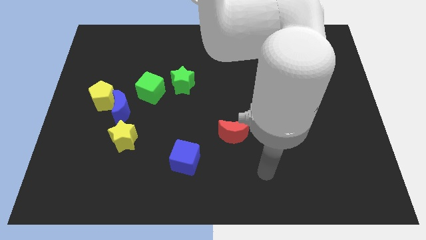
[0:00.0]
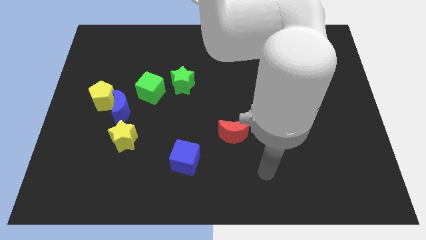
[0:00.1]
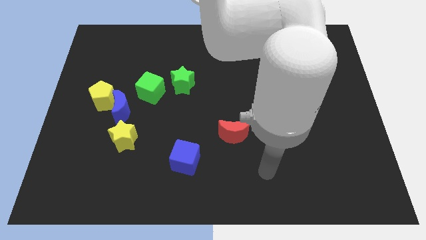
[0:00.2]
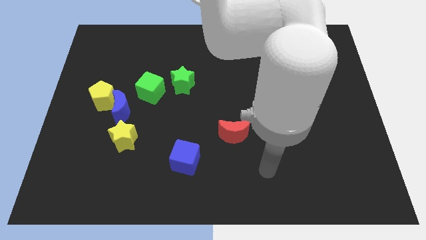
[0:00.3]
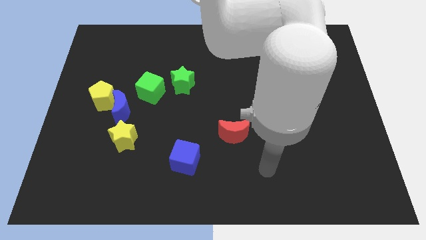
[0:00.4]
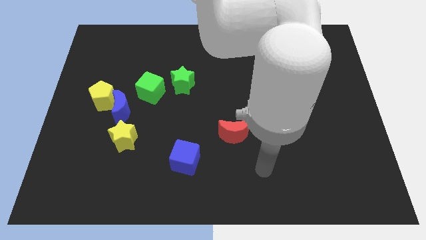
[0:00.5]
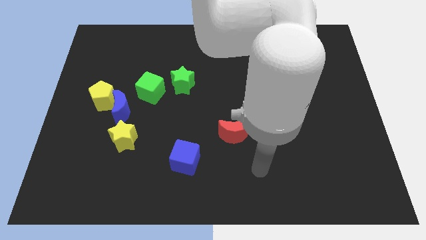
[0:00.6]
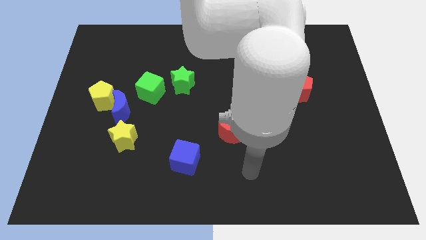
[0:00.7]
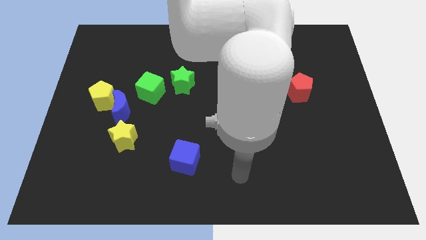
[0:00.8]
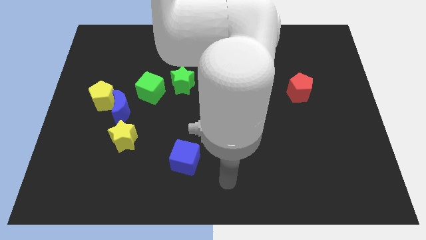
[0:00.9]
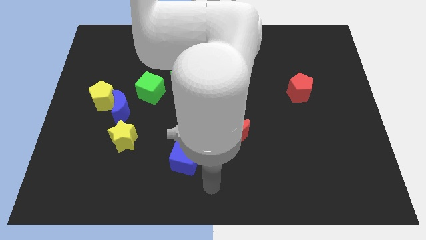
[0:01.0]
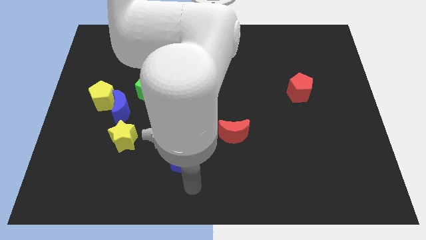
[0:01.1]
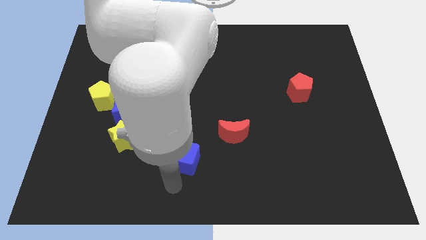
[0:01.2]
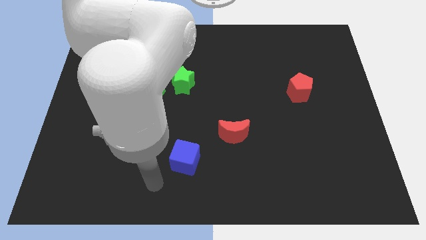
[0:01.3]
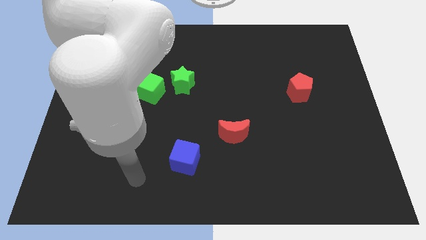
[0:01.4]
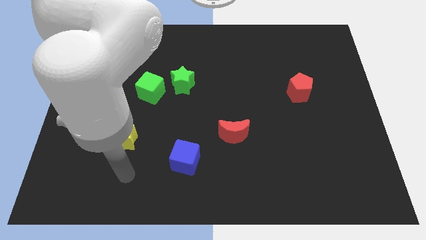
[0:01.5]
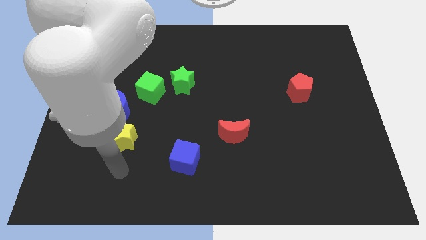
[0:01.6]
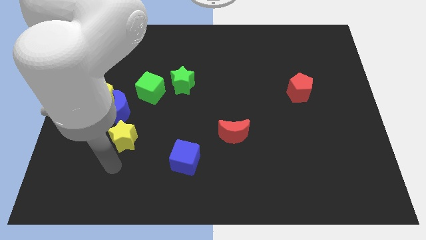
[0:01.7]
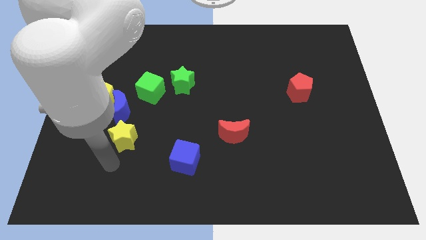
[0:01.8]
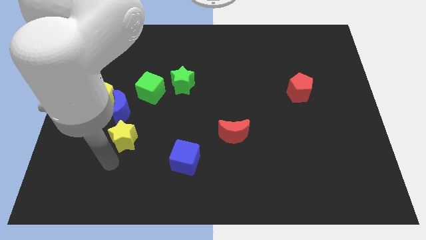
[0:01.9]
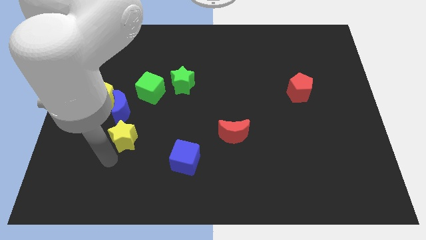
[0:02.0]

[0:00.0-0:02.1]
move your arm towards the yellow star

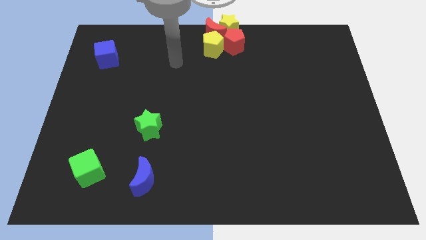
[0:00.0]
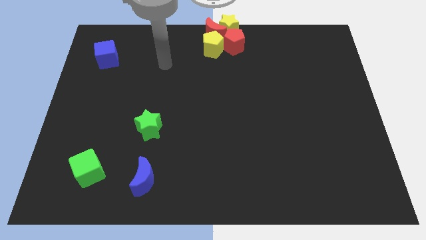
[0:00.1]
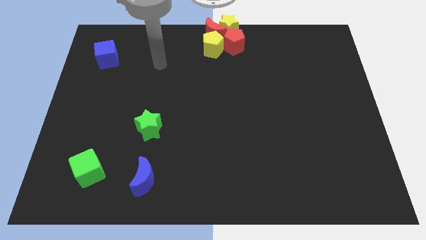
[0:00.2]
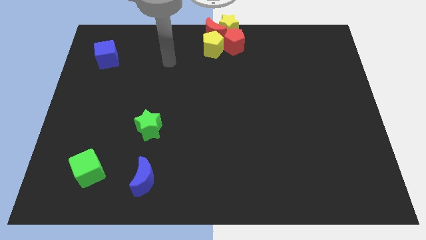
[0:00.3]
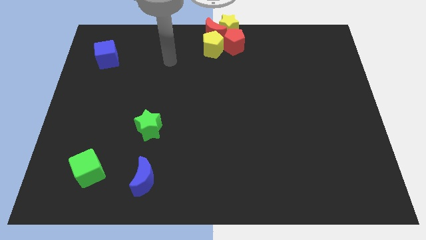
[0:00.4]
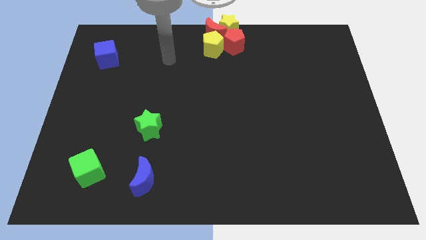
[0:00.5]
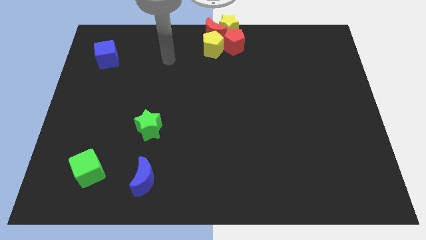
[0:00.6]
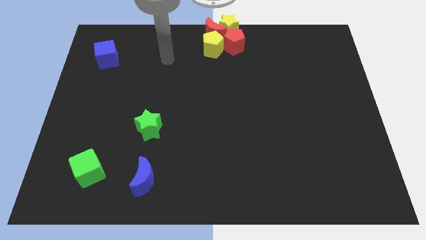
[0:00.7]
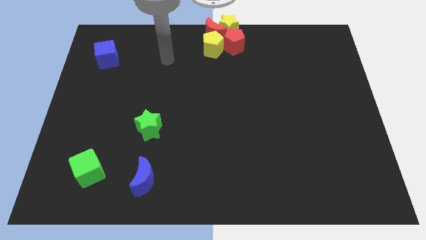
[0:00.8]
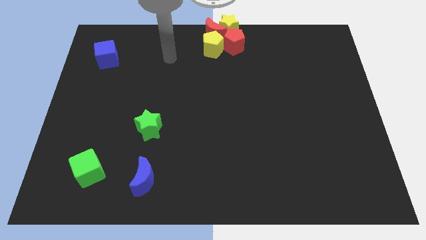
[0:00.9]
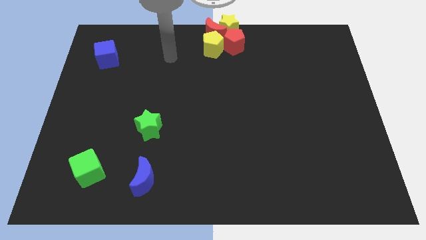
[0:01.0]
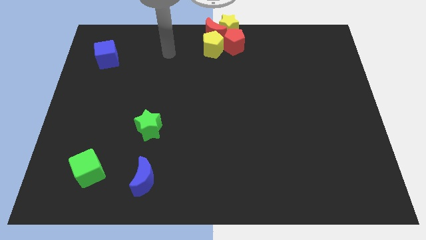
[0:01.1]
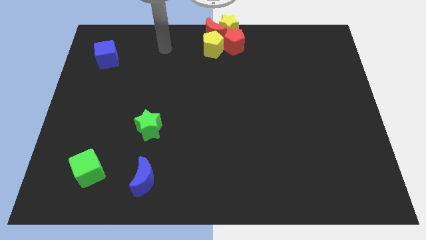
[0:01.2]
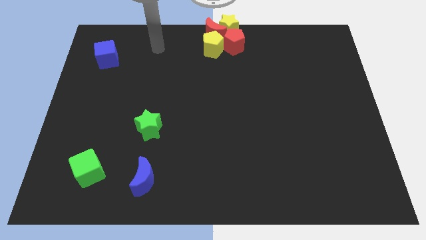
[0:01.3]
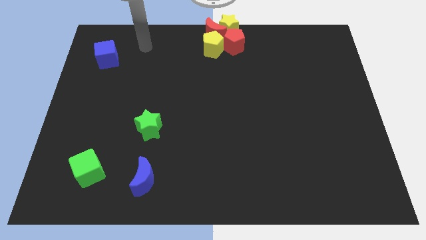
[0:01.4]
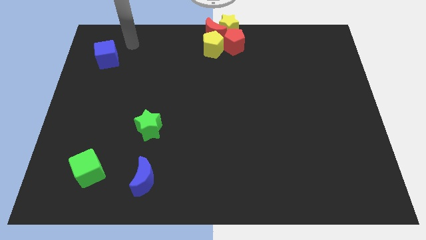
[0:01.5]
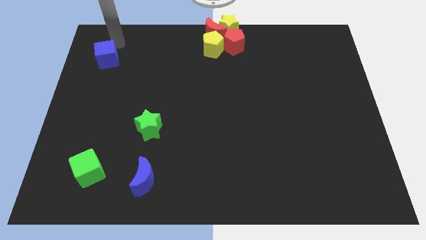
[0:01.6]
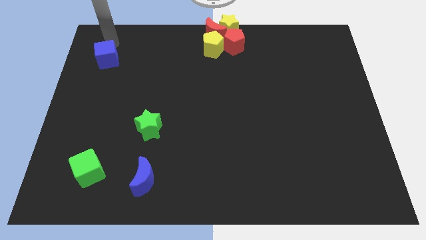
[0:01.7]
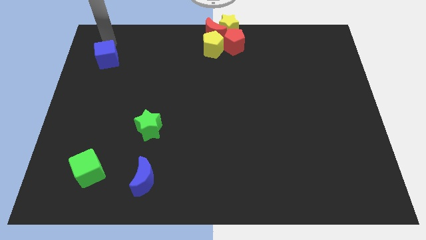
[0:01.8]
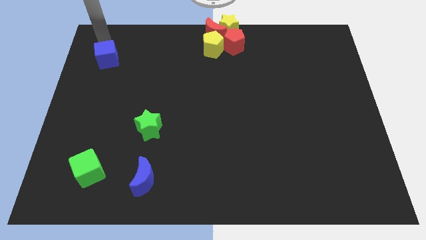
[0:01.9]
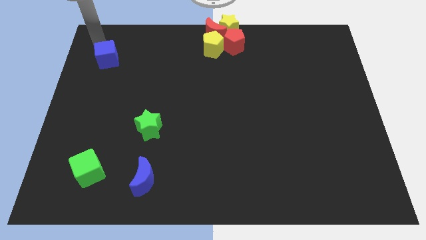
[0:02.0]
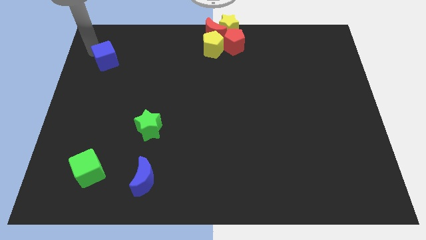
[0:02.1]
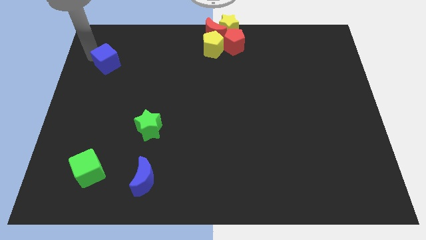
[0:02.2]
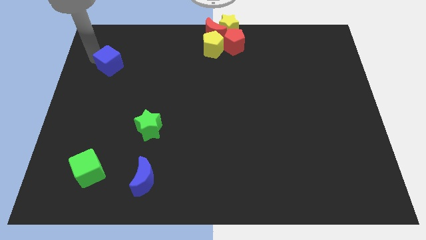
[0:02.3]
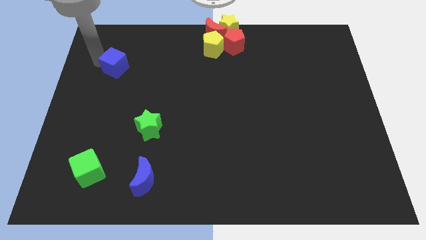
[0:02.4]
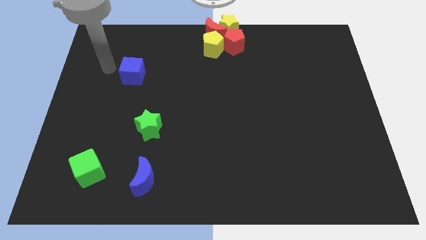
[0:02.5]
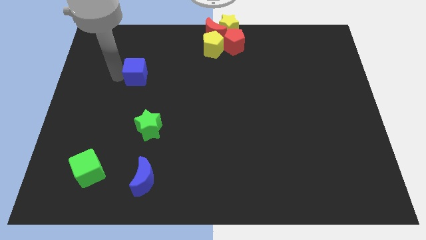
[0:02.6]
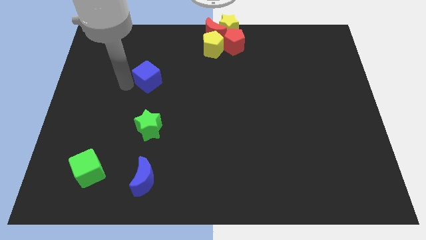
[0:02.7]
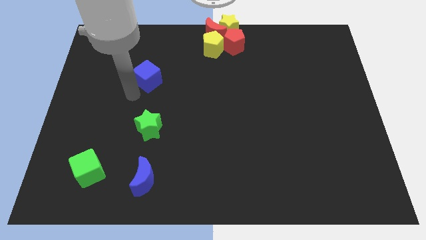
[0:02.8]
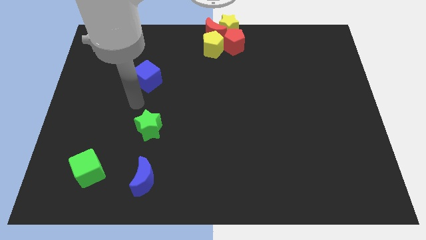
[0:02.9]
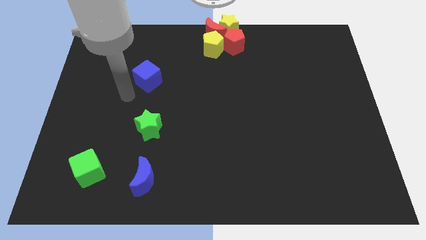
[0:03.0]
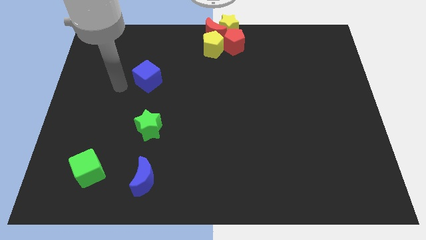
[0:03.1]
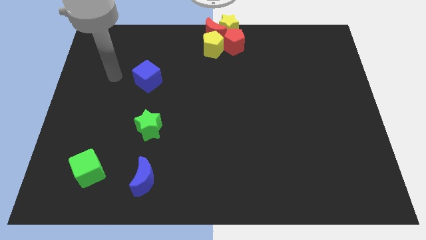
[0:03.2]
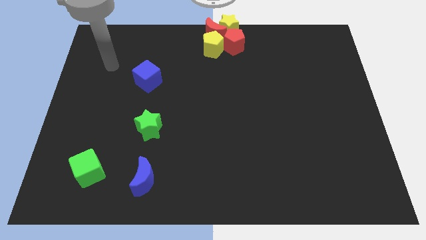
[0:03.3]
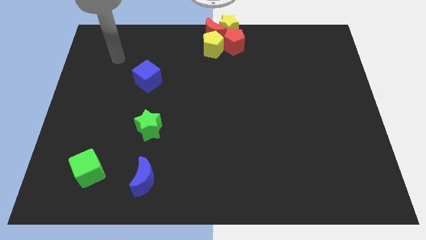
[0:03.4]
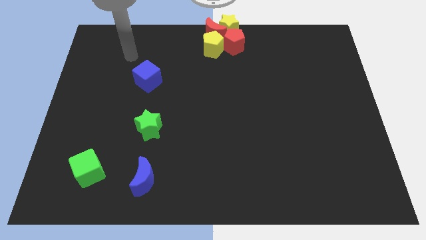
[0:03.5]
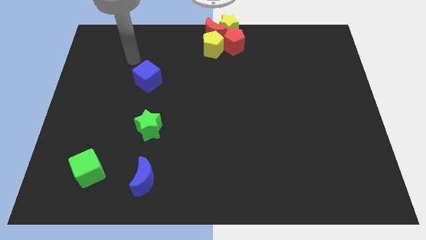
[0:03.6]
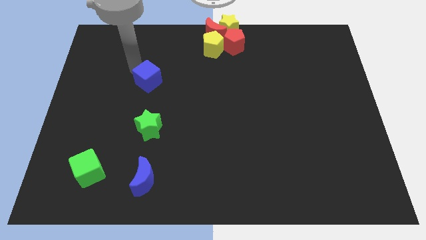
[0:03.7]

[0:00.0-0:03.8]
put the blue cube vertically above the green star

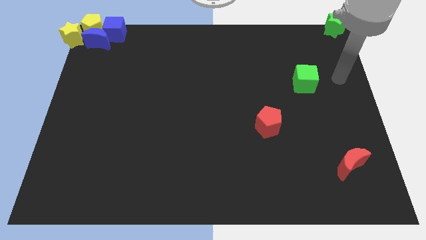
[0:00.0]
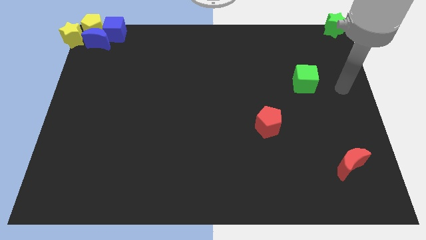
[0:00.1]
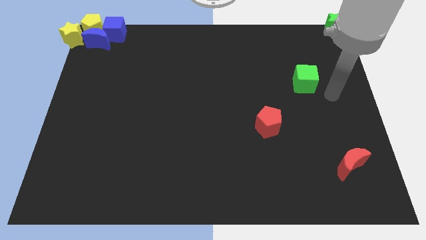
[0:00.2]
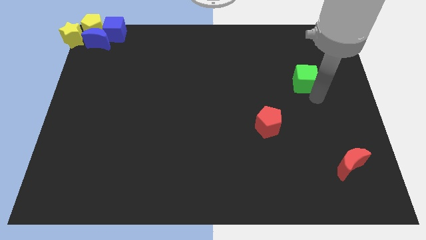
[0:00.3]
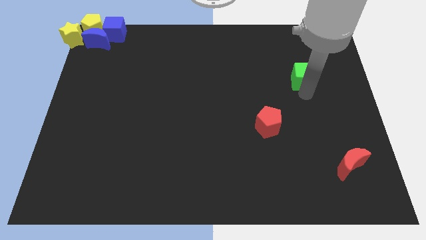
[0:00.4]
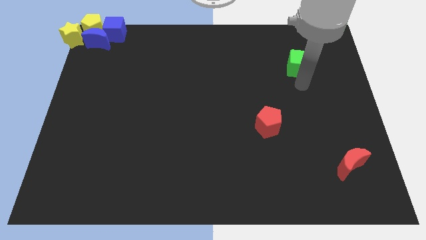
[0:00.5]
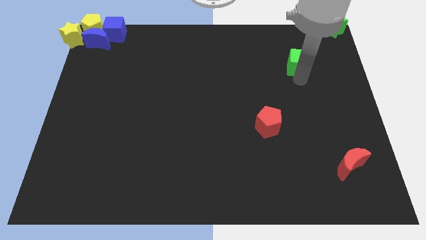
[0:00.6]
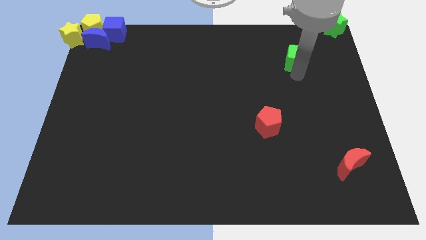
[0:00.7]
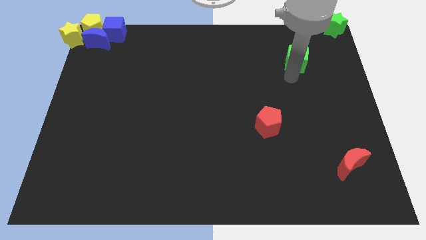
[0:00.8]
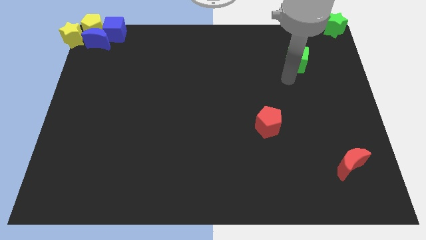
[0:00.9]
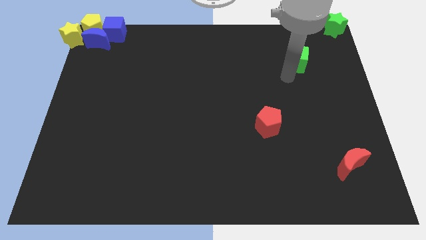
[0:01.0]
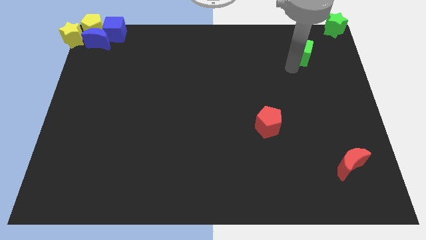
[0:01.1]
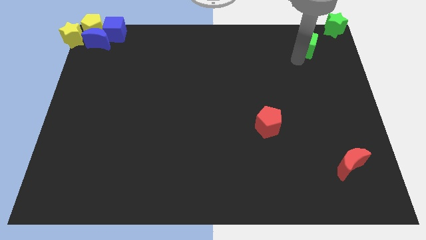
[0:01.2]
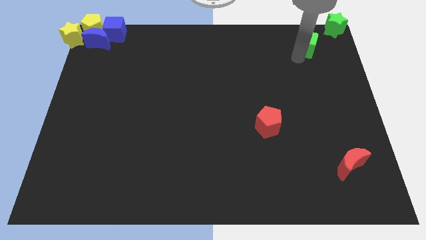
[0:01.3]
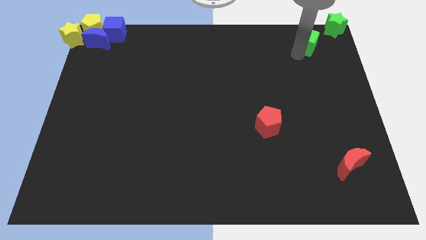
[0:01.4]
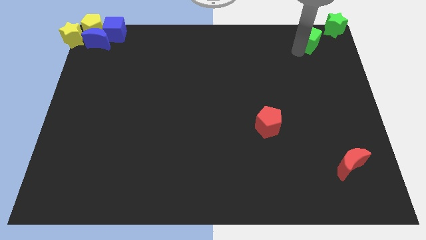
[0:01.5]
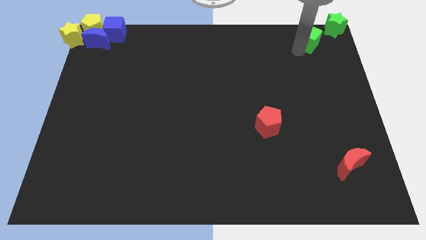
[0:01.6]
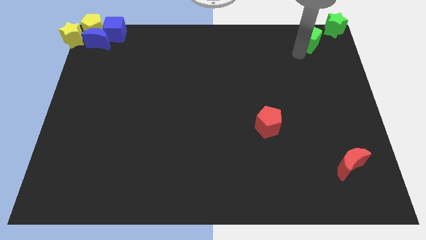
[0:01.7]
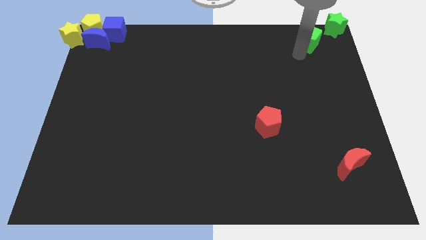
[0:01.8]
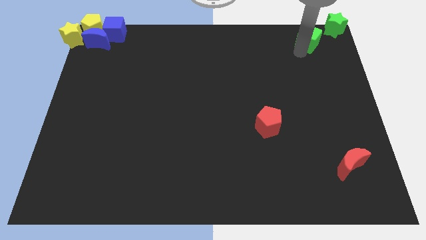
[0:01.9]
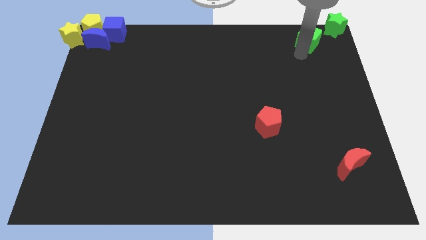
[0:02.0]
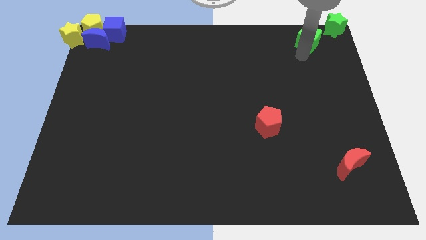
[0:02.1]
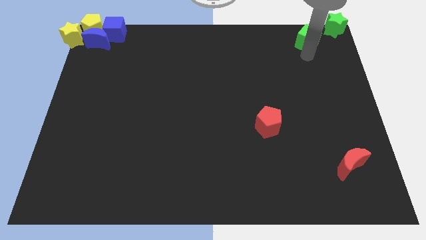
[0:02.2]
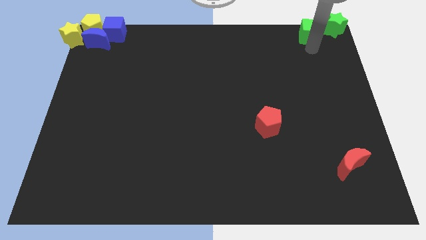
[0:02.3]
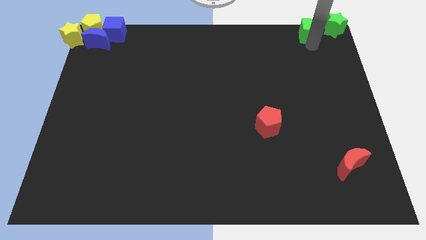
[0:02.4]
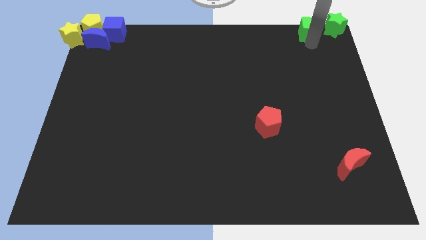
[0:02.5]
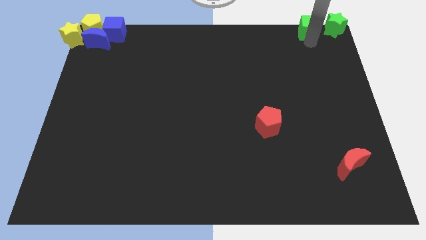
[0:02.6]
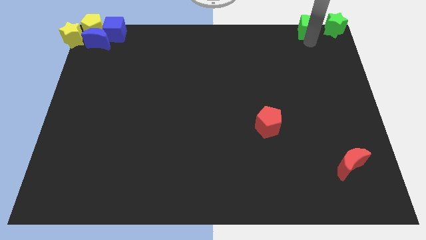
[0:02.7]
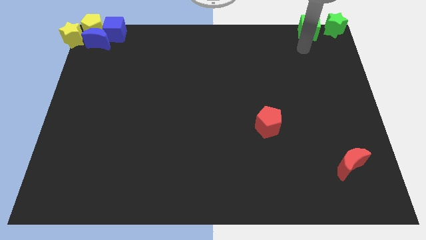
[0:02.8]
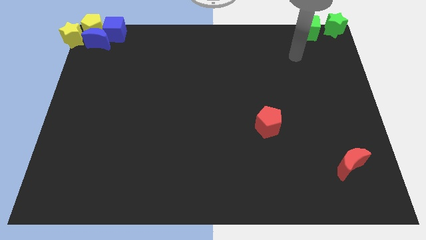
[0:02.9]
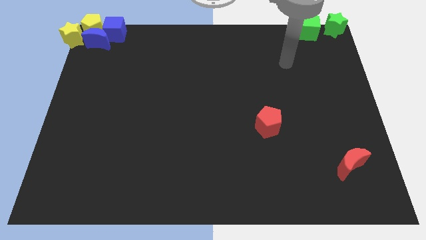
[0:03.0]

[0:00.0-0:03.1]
move the green cube left to the green star
